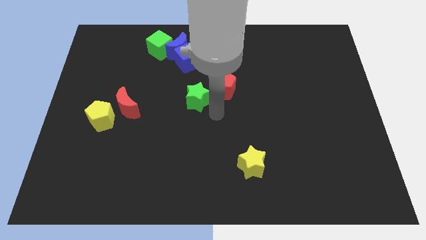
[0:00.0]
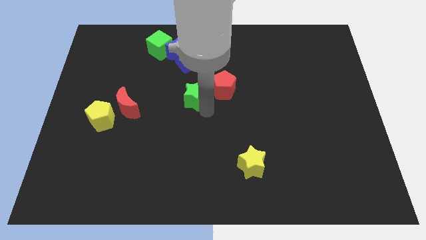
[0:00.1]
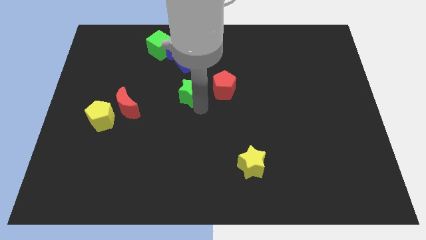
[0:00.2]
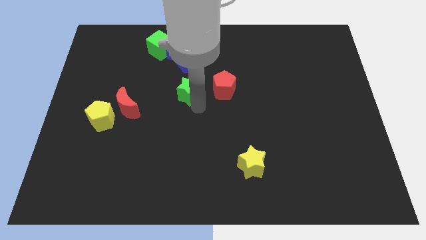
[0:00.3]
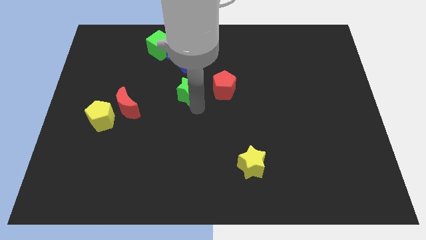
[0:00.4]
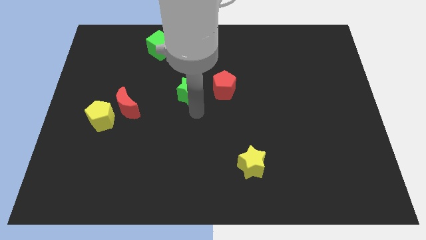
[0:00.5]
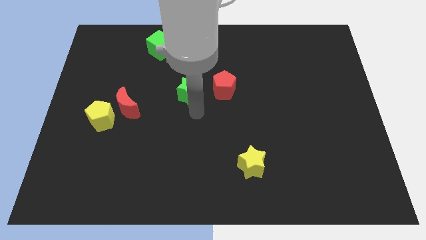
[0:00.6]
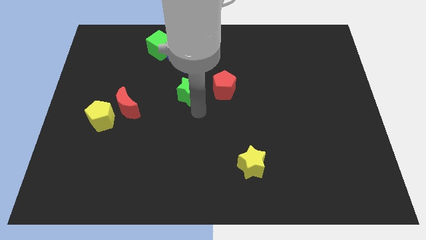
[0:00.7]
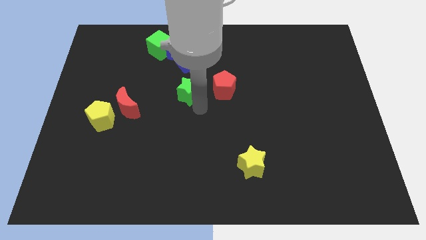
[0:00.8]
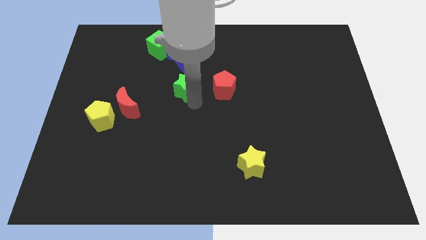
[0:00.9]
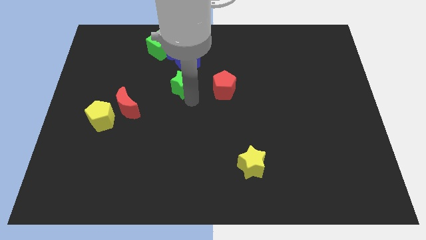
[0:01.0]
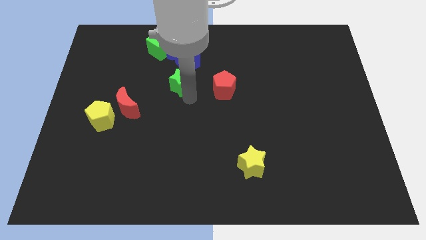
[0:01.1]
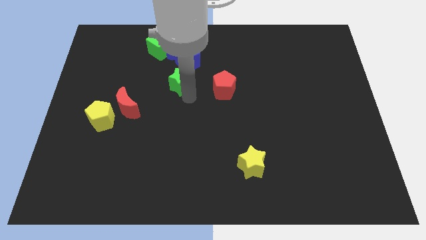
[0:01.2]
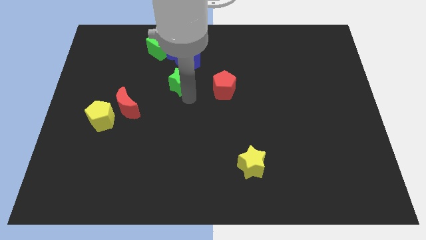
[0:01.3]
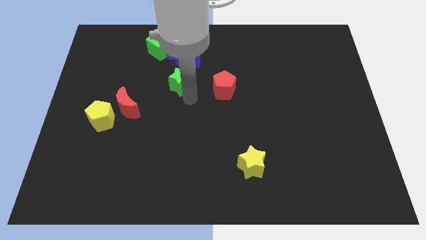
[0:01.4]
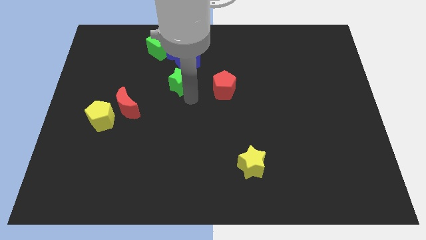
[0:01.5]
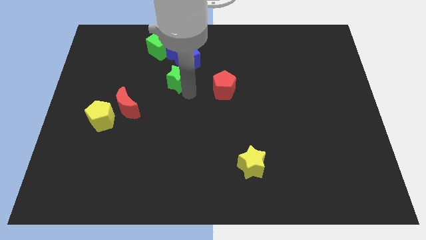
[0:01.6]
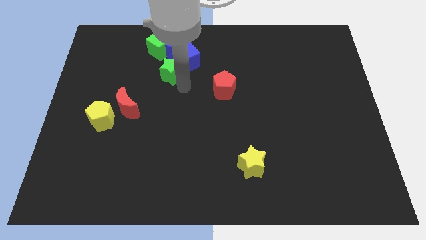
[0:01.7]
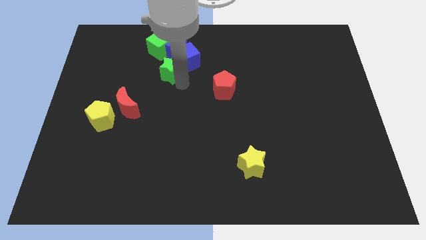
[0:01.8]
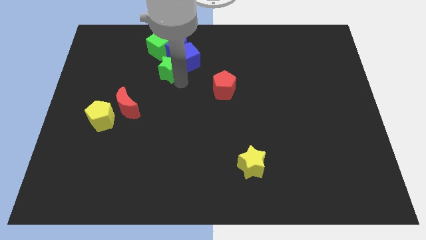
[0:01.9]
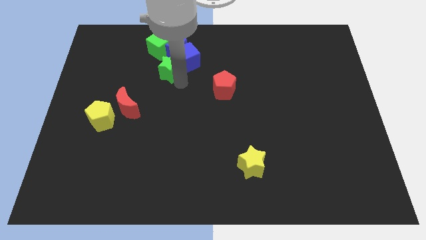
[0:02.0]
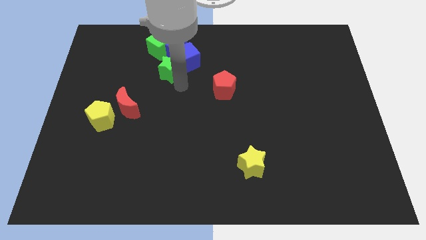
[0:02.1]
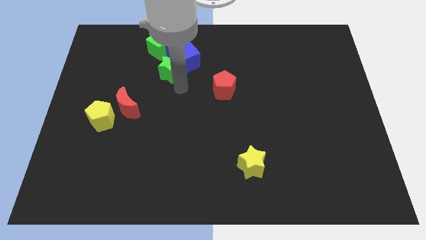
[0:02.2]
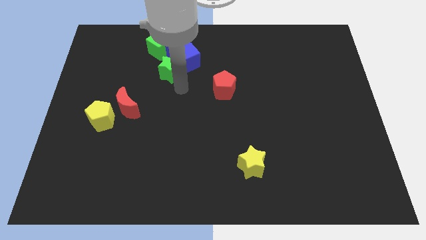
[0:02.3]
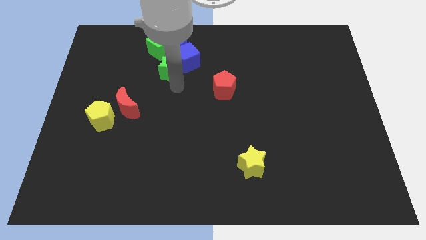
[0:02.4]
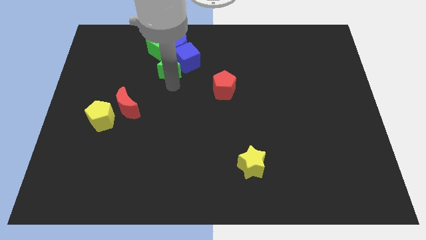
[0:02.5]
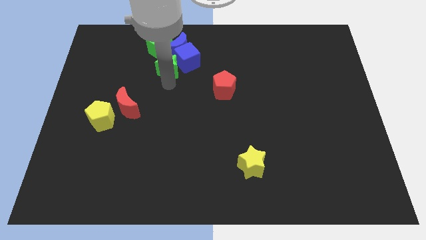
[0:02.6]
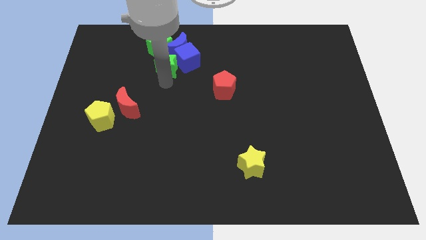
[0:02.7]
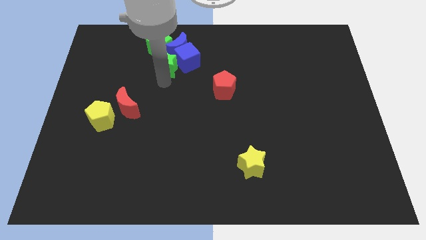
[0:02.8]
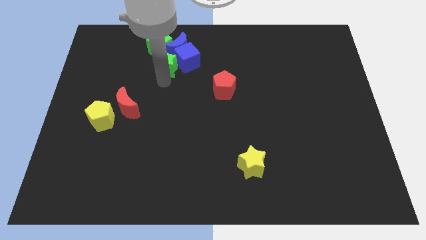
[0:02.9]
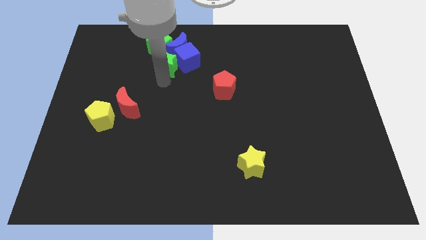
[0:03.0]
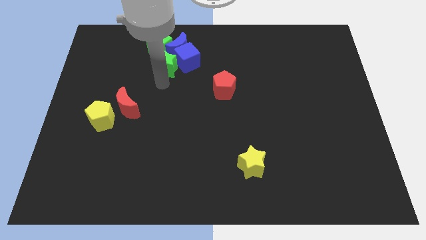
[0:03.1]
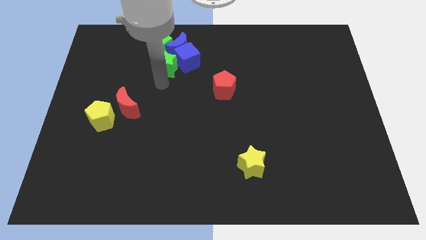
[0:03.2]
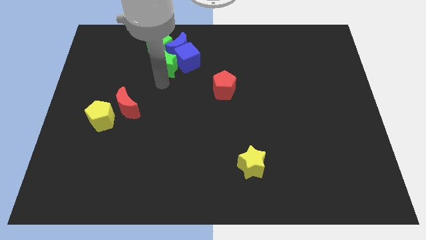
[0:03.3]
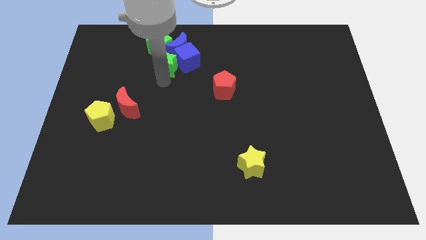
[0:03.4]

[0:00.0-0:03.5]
push the green star towards the bottom of blue crescent

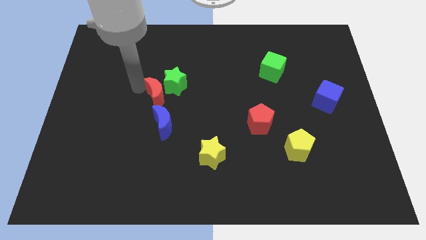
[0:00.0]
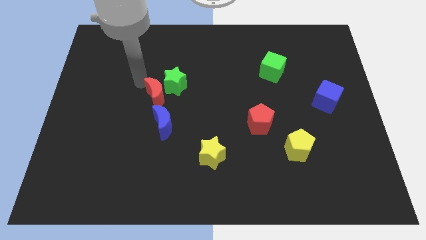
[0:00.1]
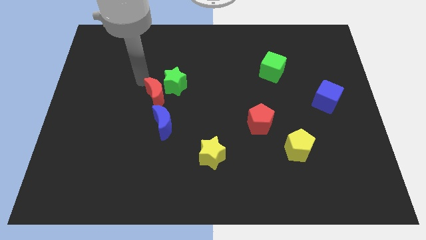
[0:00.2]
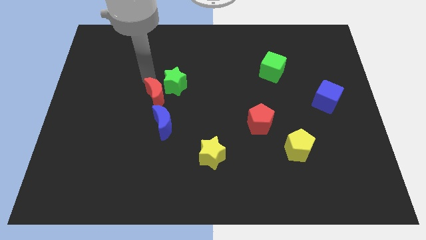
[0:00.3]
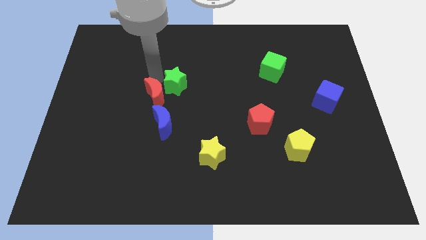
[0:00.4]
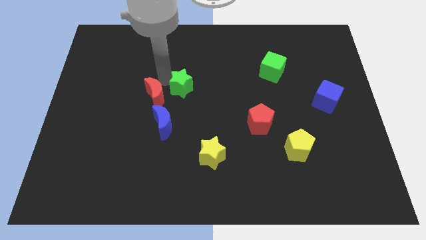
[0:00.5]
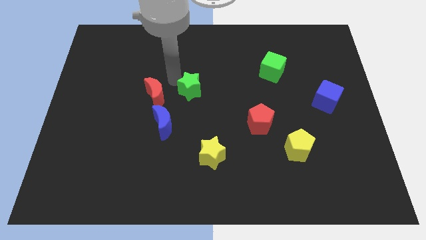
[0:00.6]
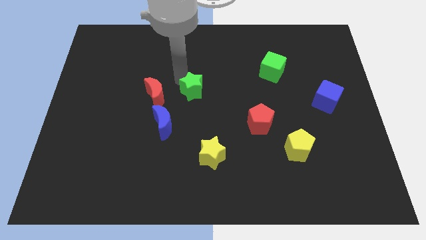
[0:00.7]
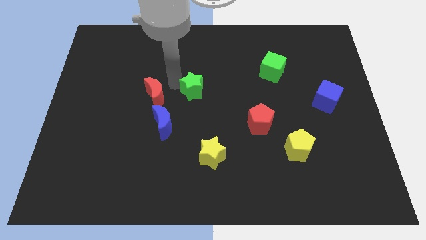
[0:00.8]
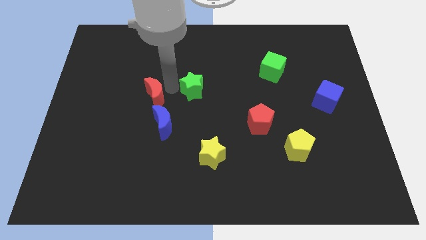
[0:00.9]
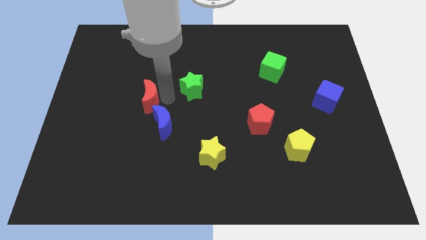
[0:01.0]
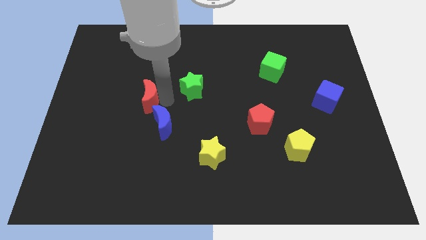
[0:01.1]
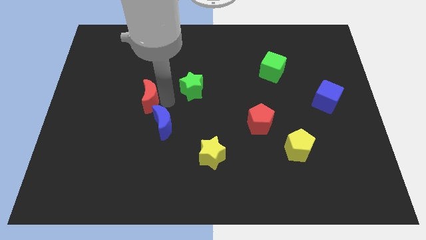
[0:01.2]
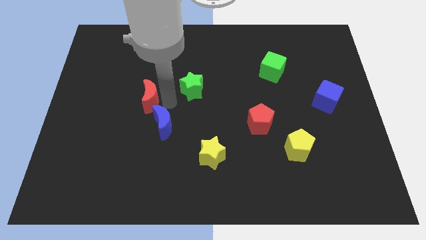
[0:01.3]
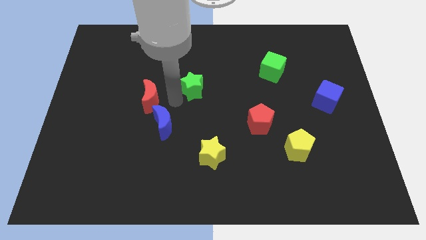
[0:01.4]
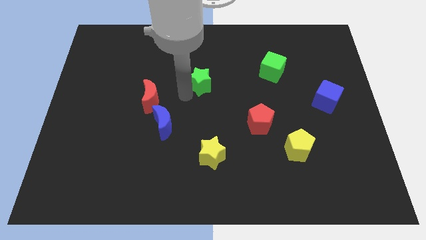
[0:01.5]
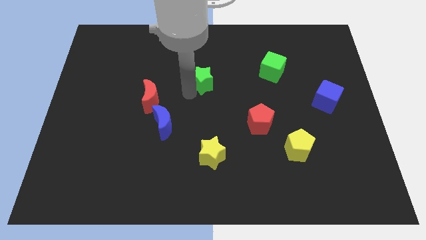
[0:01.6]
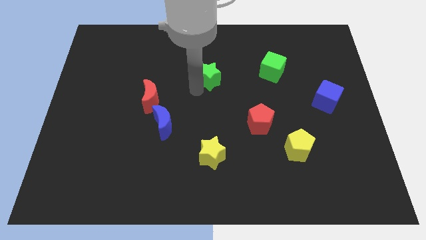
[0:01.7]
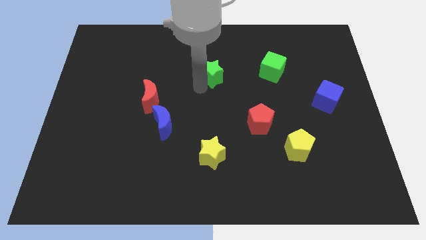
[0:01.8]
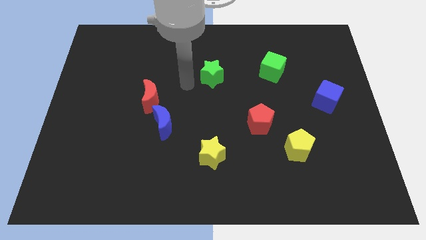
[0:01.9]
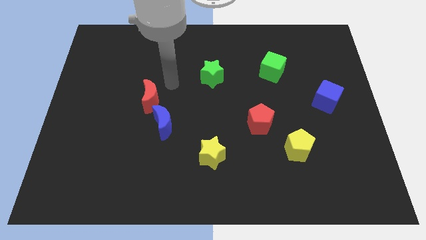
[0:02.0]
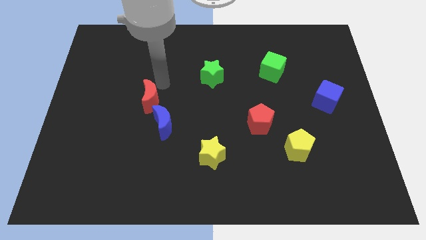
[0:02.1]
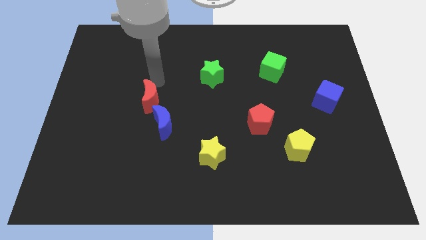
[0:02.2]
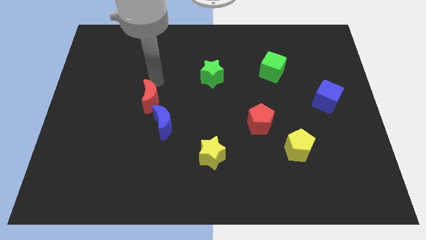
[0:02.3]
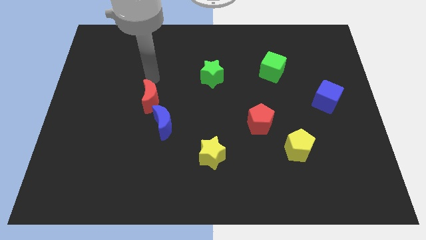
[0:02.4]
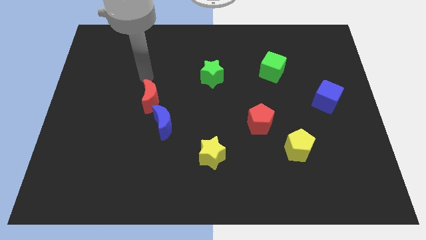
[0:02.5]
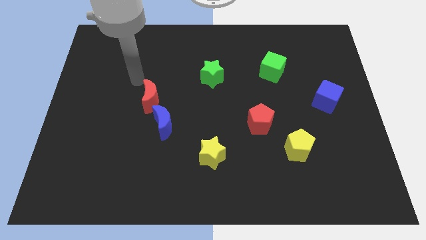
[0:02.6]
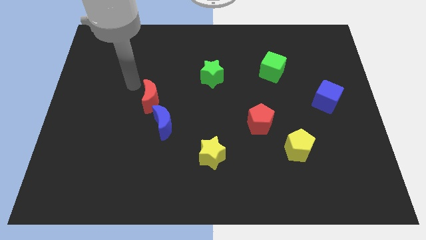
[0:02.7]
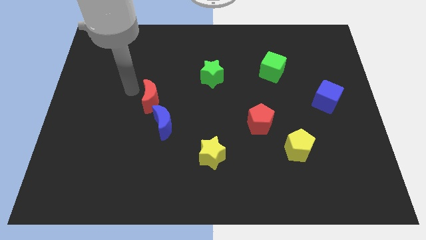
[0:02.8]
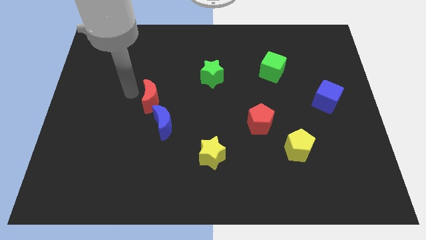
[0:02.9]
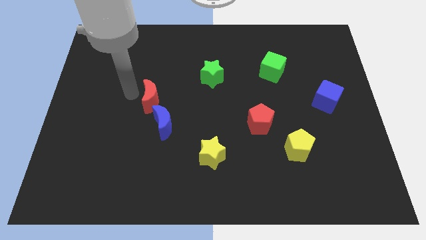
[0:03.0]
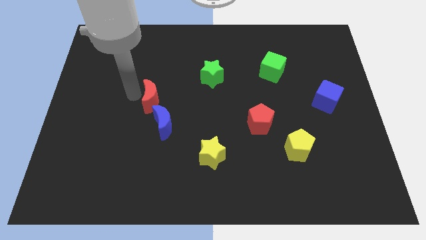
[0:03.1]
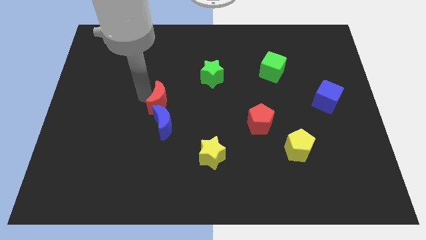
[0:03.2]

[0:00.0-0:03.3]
slightly move the green star towards the right

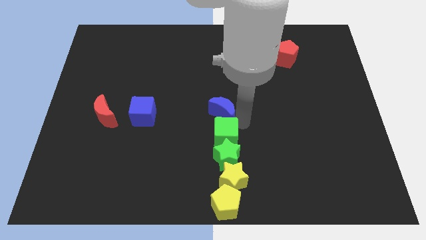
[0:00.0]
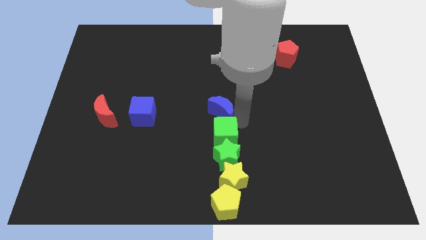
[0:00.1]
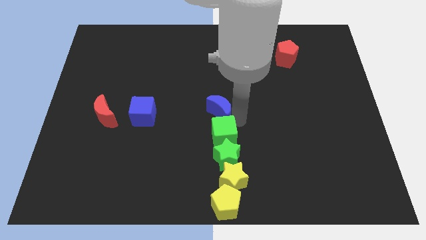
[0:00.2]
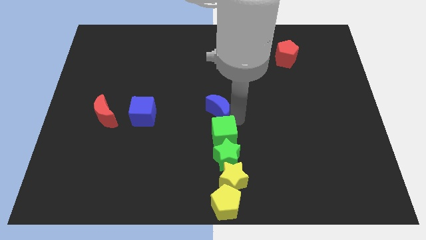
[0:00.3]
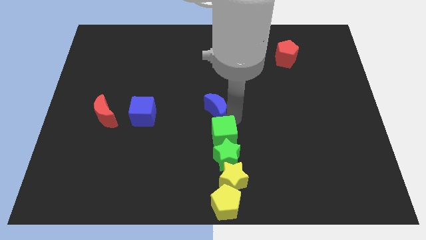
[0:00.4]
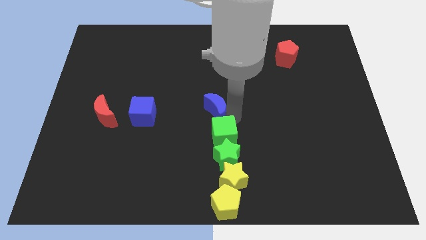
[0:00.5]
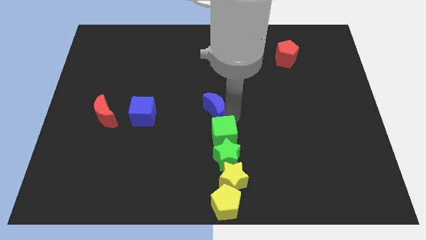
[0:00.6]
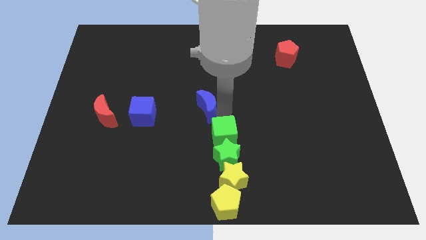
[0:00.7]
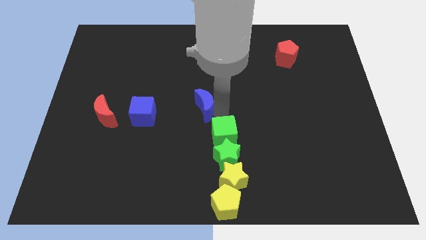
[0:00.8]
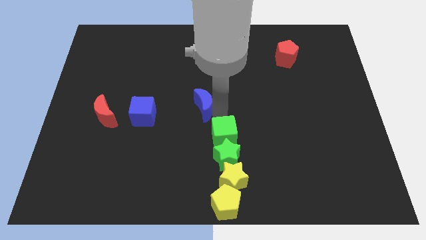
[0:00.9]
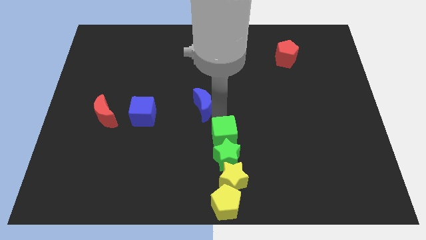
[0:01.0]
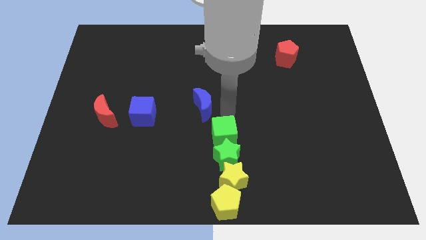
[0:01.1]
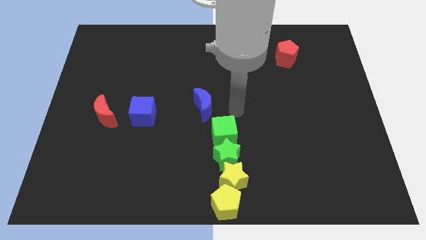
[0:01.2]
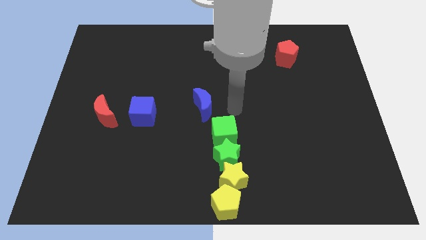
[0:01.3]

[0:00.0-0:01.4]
separate the blue crescent from the green cube

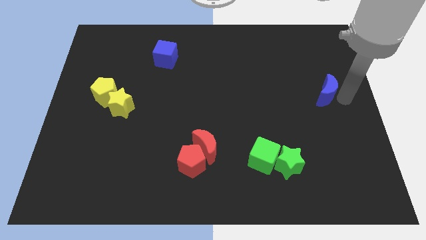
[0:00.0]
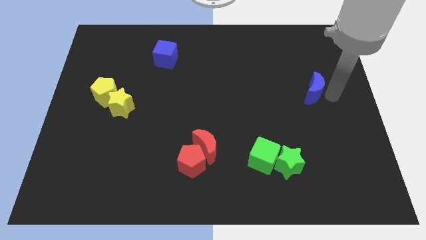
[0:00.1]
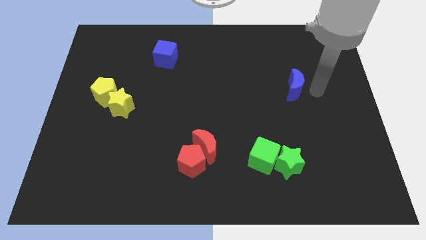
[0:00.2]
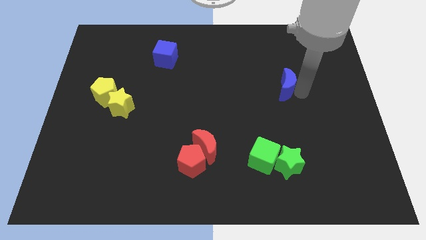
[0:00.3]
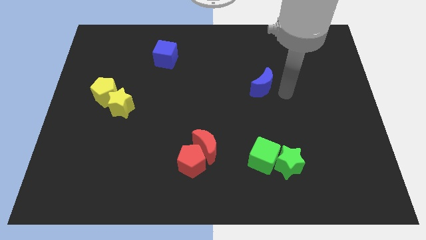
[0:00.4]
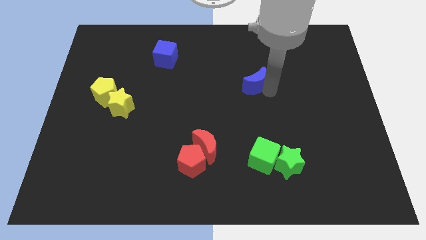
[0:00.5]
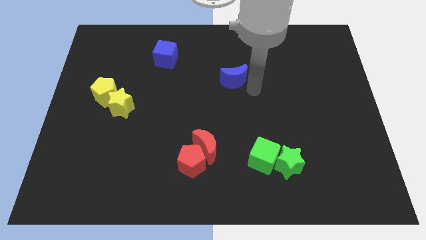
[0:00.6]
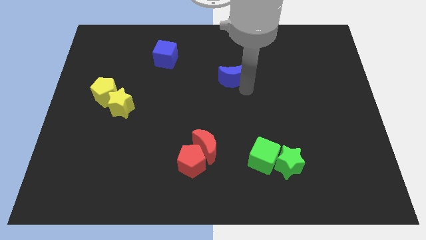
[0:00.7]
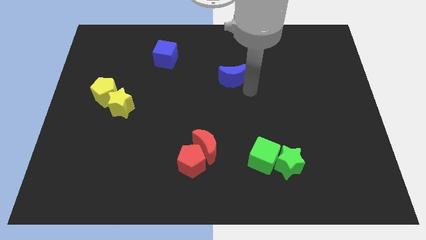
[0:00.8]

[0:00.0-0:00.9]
drag the blue moon to the left
